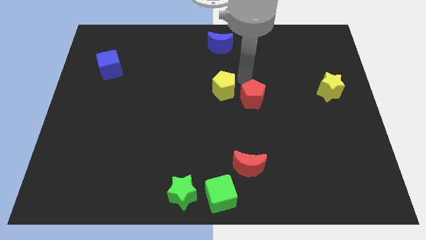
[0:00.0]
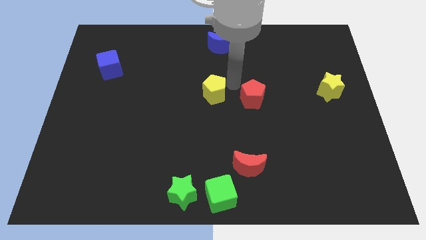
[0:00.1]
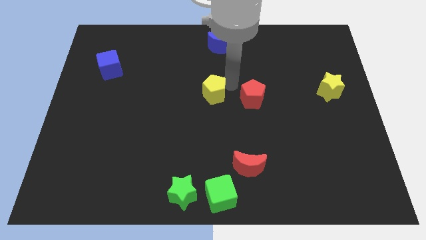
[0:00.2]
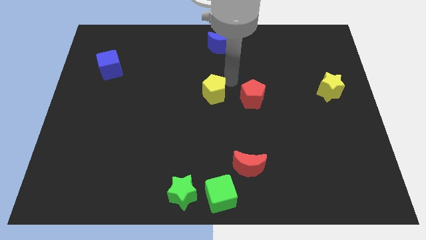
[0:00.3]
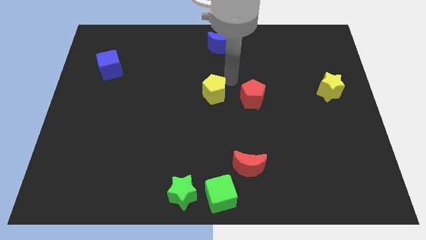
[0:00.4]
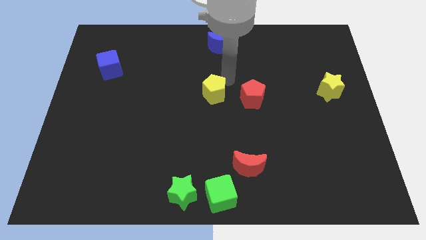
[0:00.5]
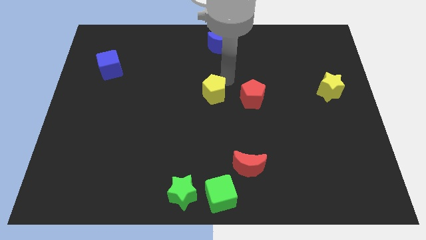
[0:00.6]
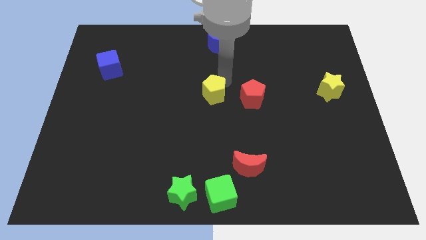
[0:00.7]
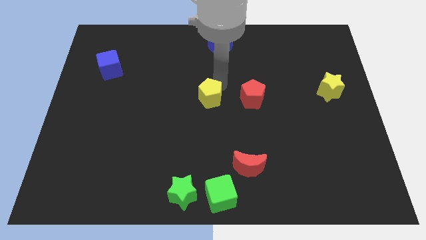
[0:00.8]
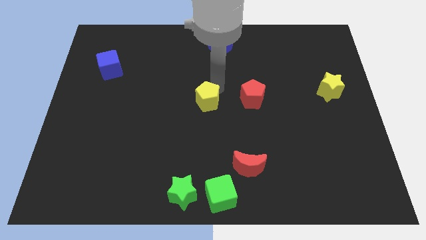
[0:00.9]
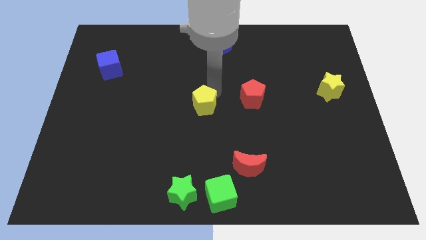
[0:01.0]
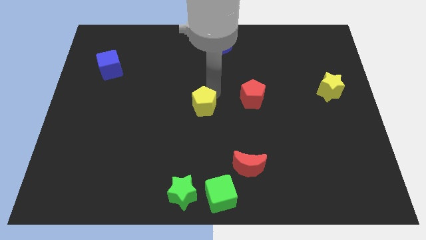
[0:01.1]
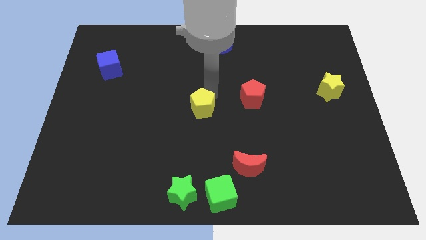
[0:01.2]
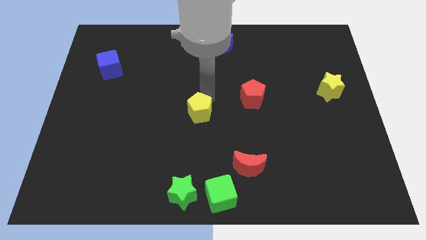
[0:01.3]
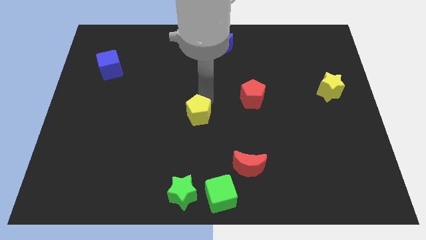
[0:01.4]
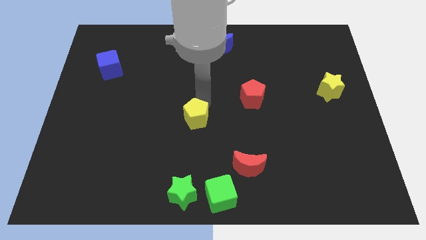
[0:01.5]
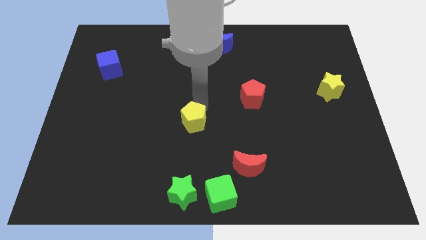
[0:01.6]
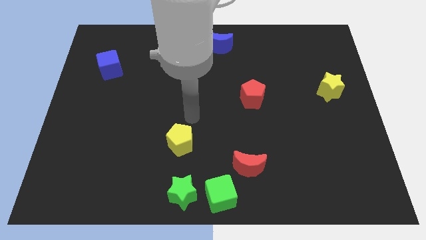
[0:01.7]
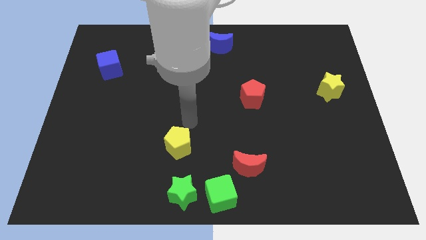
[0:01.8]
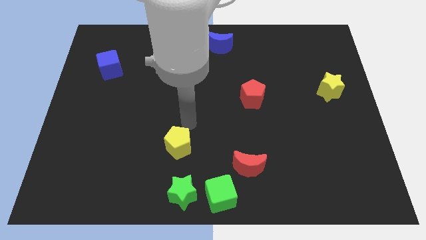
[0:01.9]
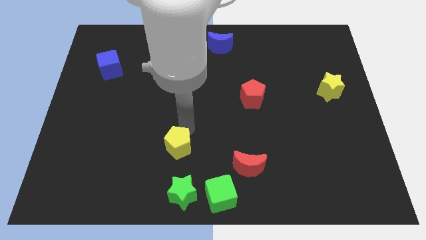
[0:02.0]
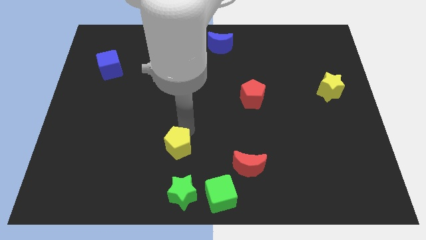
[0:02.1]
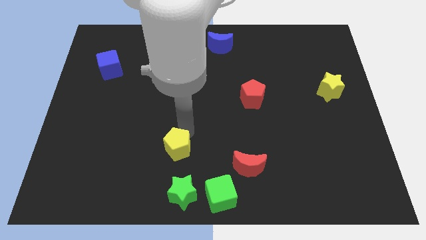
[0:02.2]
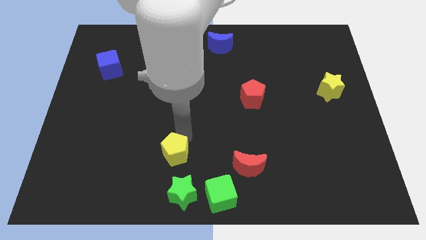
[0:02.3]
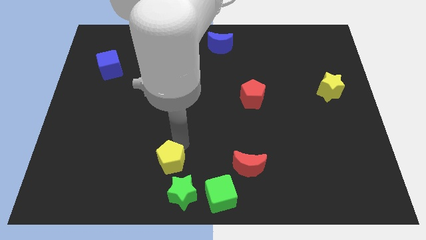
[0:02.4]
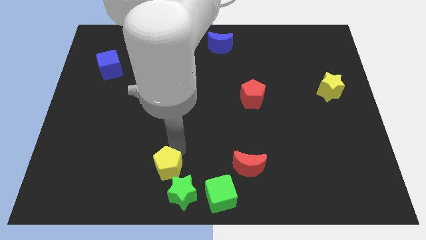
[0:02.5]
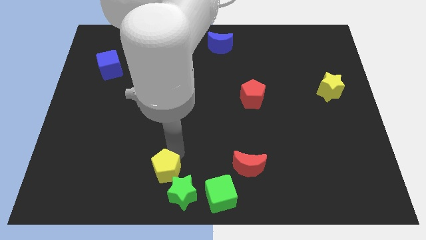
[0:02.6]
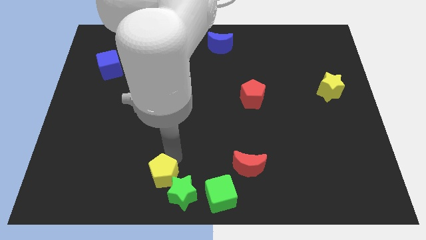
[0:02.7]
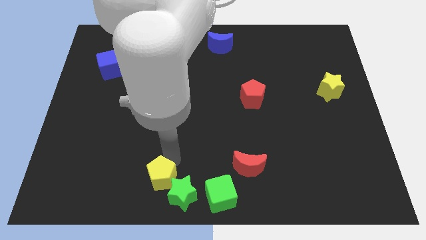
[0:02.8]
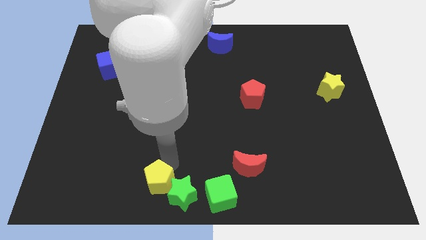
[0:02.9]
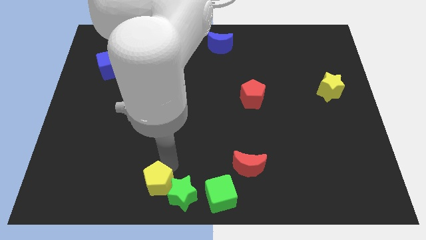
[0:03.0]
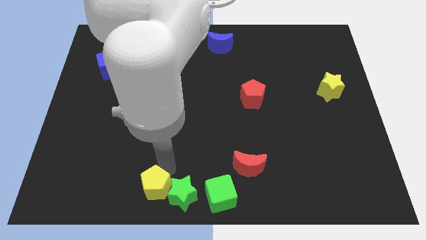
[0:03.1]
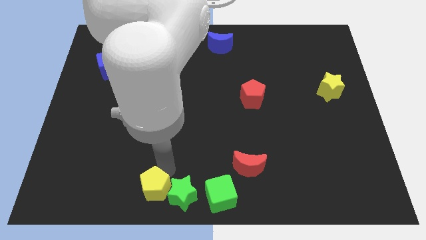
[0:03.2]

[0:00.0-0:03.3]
place the yellow pentagon at the left side of the green star

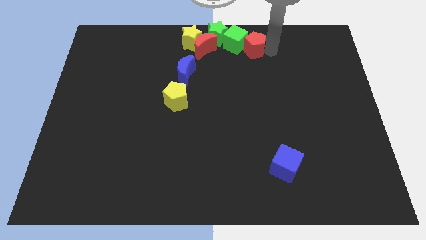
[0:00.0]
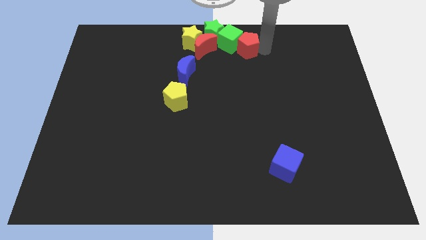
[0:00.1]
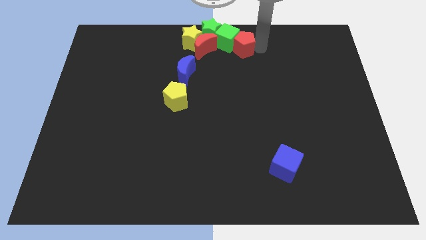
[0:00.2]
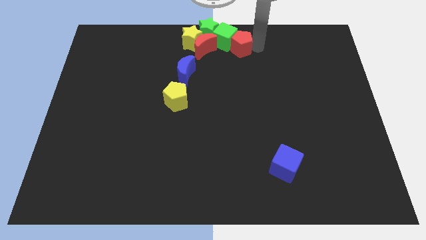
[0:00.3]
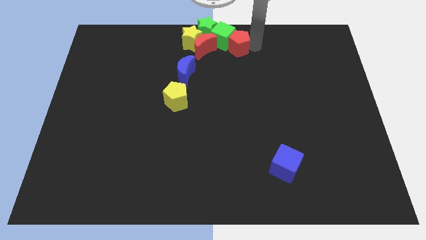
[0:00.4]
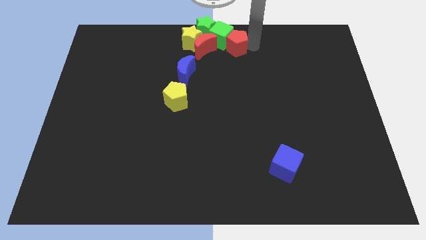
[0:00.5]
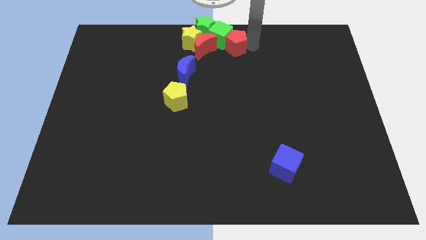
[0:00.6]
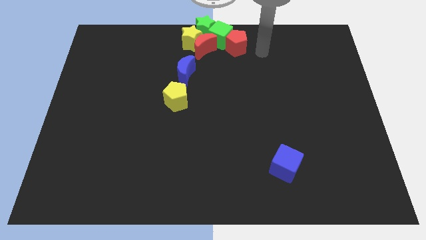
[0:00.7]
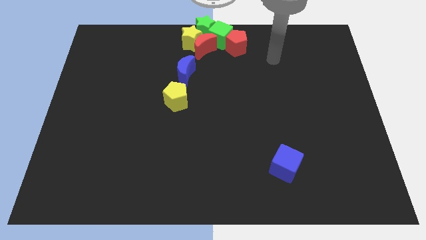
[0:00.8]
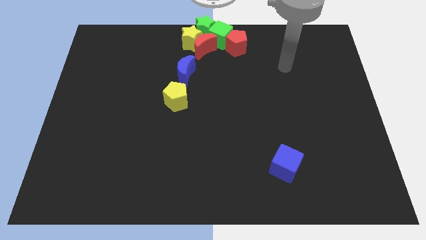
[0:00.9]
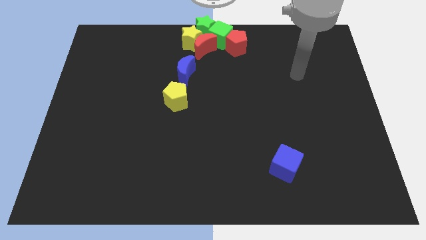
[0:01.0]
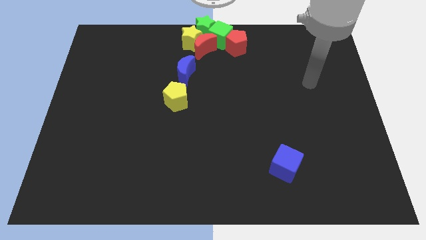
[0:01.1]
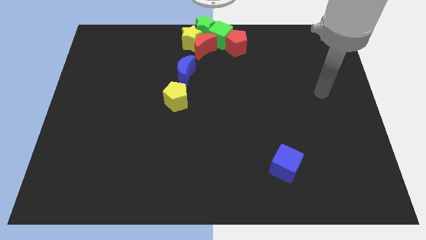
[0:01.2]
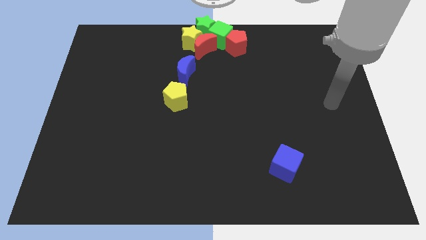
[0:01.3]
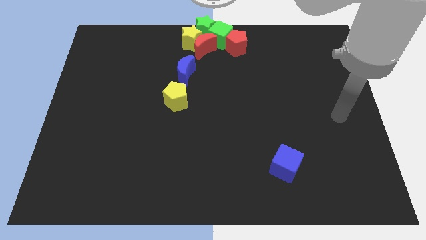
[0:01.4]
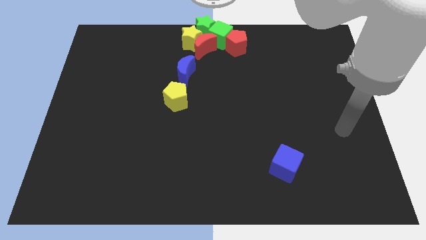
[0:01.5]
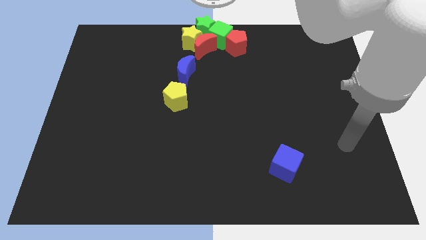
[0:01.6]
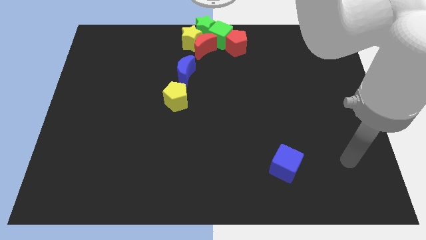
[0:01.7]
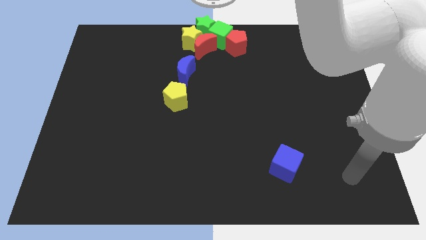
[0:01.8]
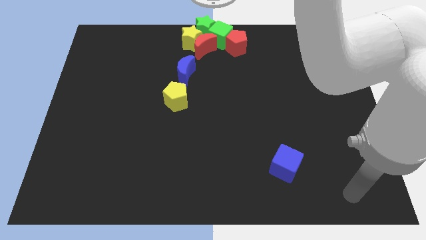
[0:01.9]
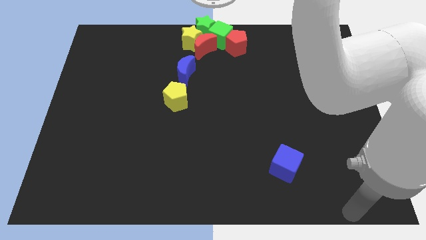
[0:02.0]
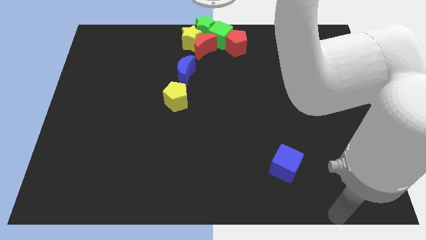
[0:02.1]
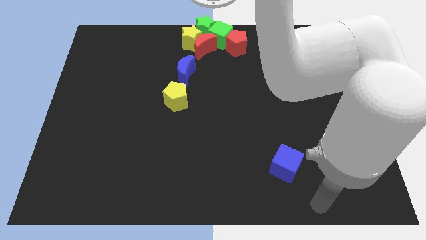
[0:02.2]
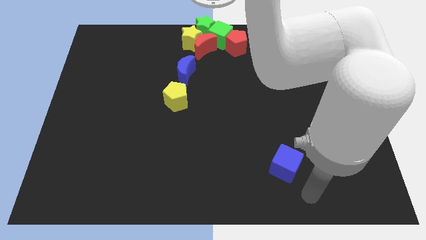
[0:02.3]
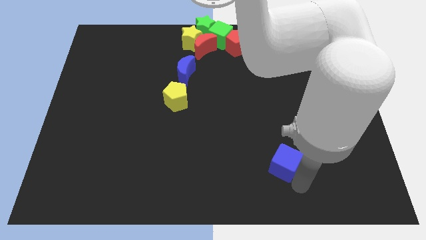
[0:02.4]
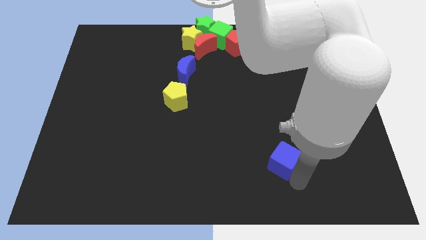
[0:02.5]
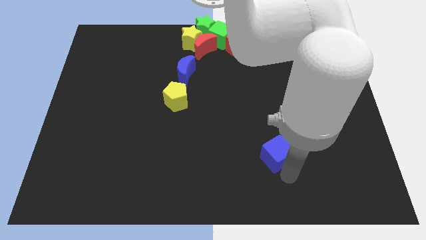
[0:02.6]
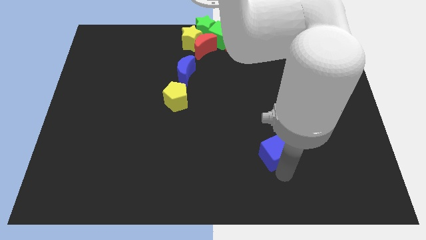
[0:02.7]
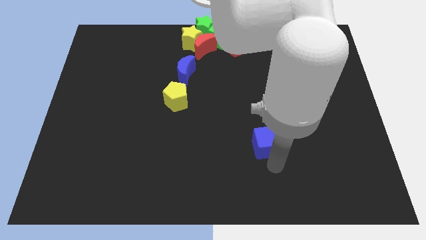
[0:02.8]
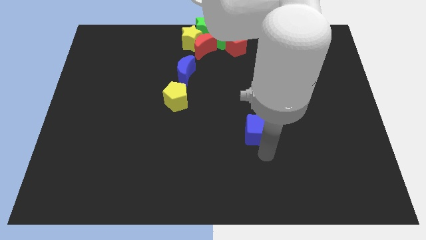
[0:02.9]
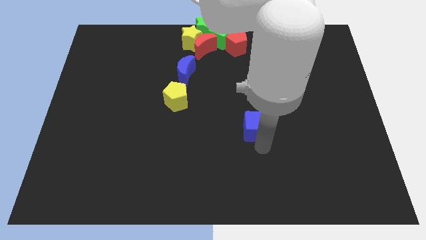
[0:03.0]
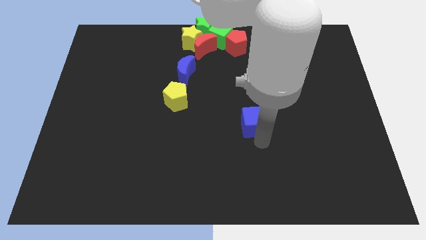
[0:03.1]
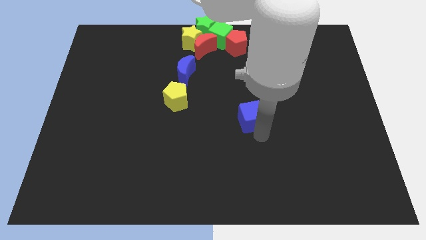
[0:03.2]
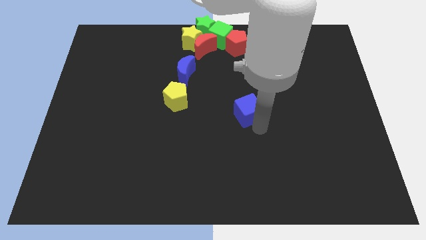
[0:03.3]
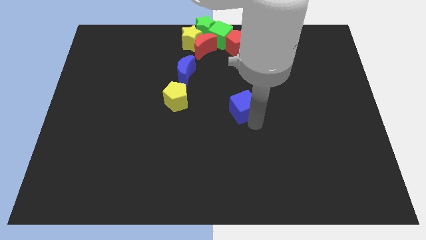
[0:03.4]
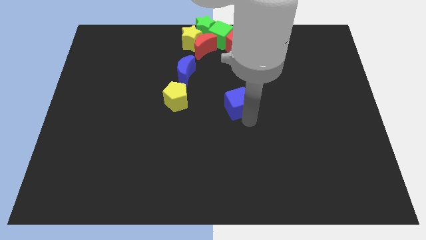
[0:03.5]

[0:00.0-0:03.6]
move the blue cube towards the center of the board

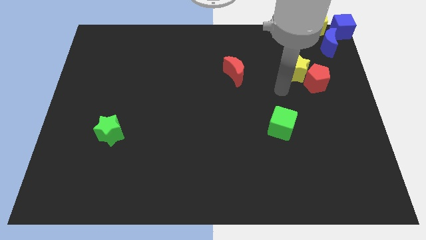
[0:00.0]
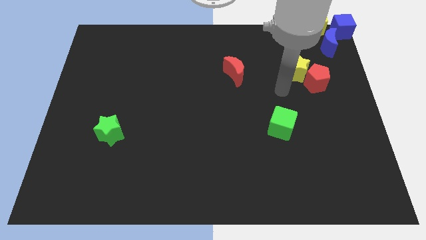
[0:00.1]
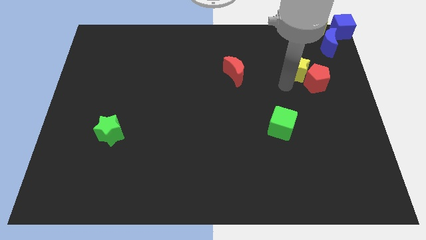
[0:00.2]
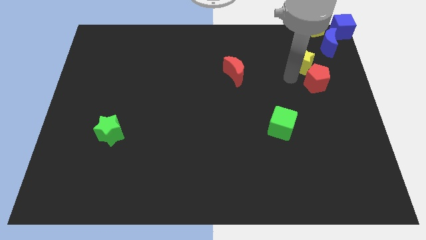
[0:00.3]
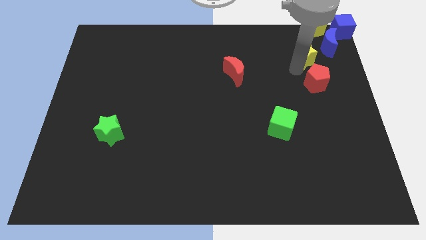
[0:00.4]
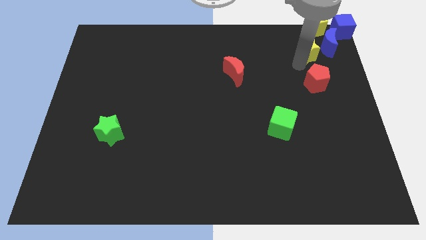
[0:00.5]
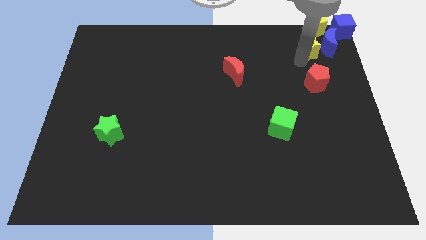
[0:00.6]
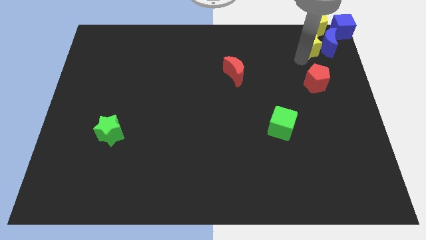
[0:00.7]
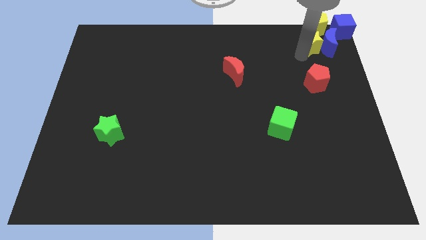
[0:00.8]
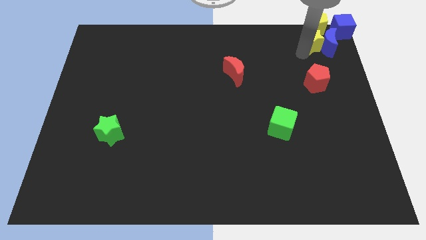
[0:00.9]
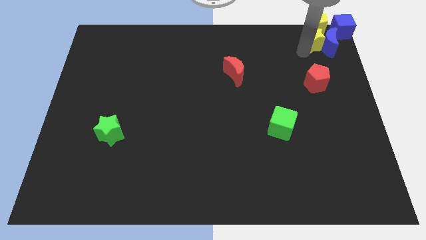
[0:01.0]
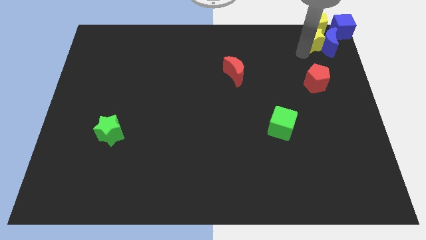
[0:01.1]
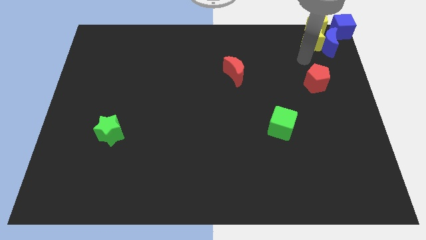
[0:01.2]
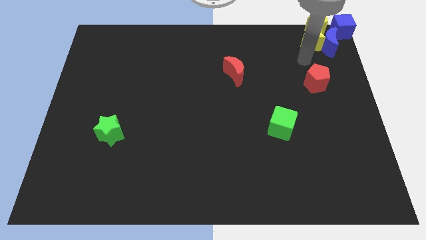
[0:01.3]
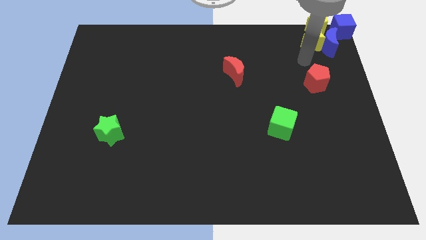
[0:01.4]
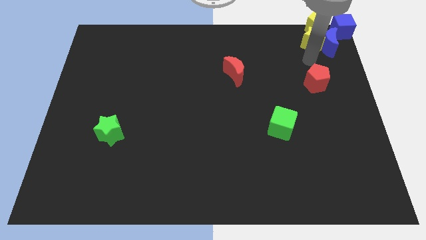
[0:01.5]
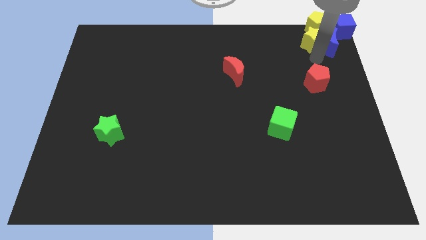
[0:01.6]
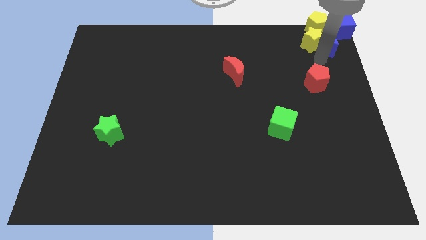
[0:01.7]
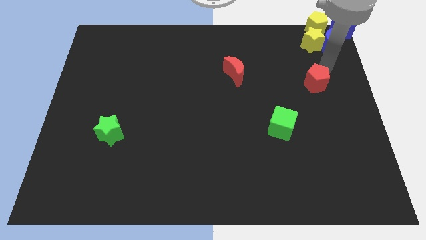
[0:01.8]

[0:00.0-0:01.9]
slide the yellow star close to the yellow pentagon

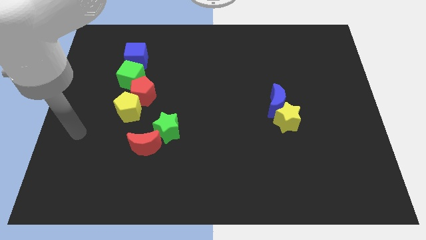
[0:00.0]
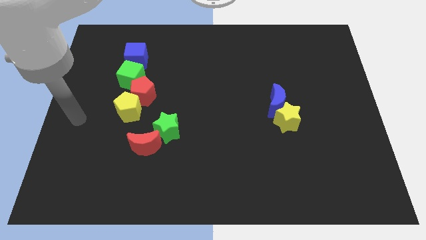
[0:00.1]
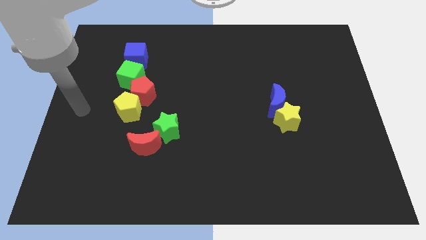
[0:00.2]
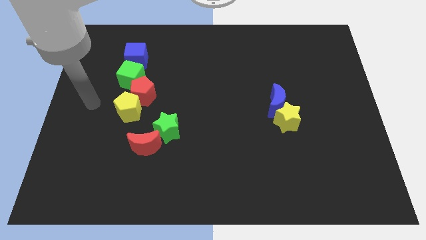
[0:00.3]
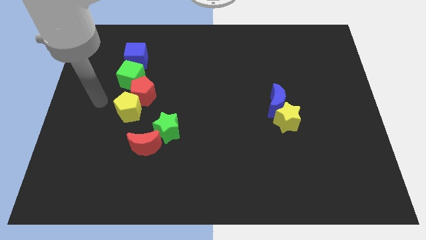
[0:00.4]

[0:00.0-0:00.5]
point your arm to the left side of yellow pentagon
